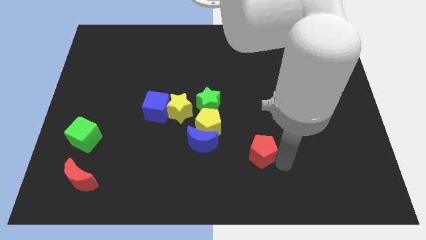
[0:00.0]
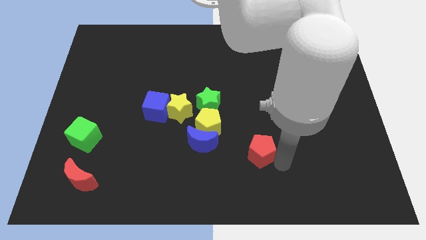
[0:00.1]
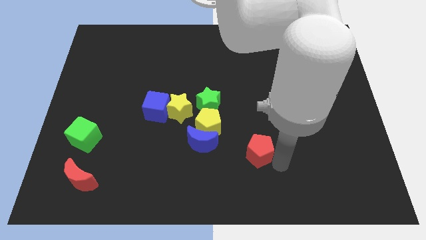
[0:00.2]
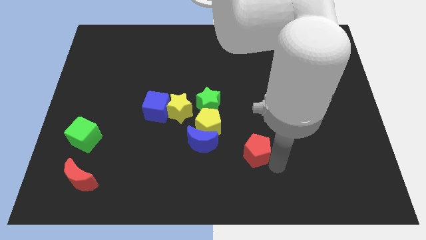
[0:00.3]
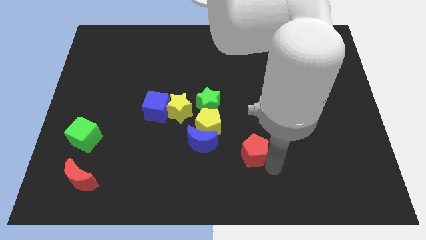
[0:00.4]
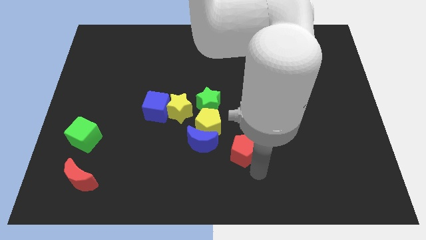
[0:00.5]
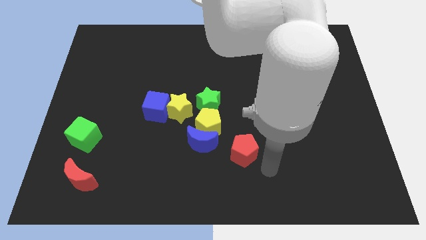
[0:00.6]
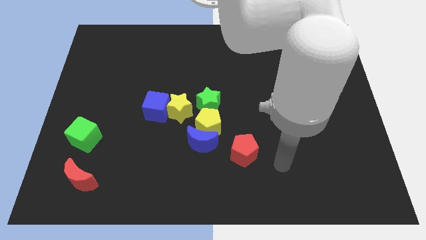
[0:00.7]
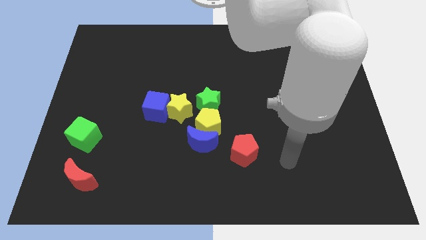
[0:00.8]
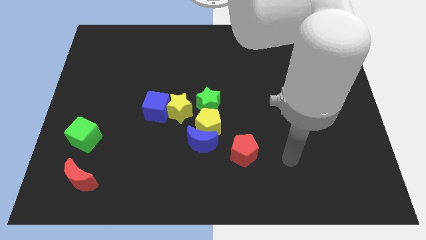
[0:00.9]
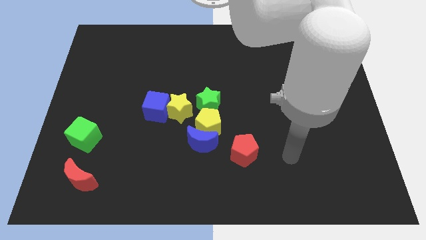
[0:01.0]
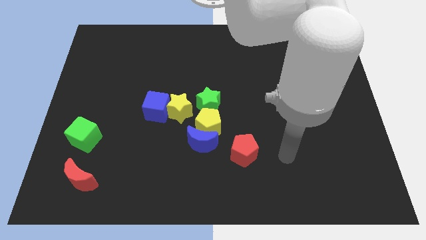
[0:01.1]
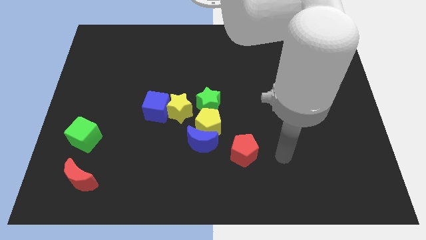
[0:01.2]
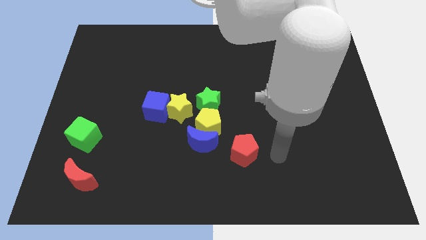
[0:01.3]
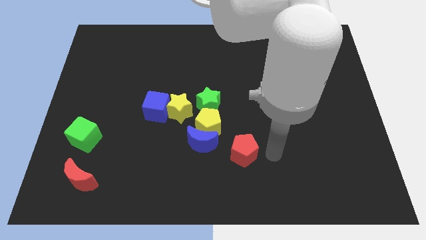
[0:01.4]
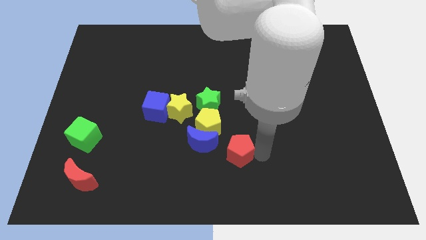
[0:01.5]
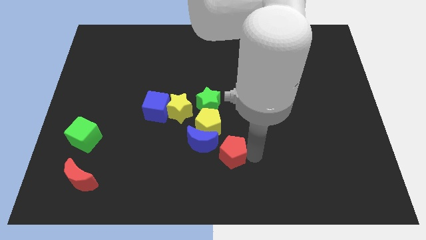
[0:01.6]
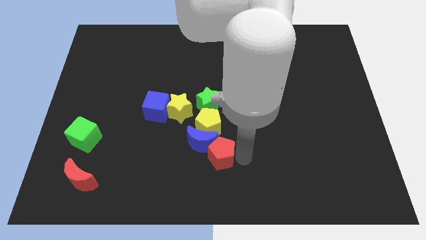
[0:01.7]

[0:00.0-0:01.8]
push the red pentagon bottom right to the blue crescent

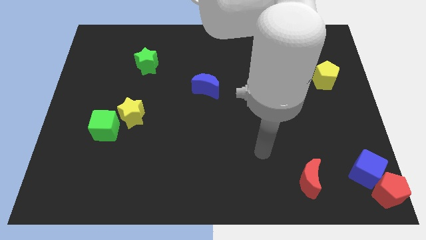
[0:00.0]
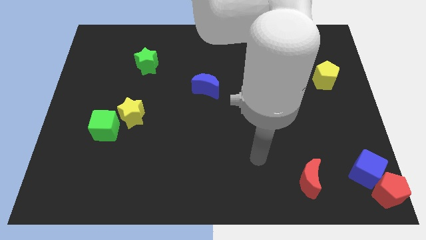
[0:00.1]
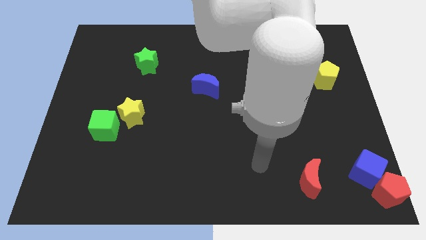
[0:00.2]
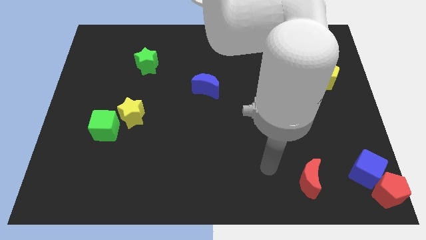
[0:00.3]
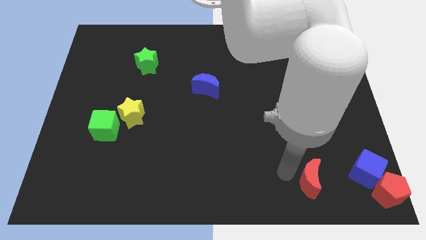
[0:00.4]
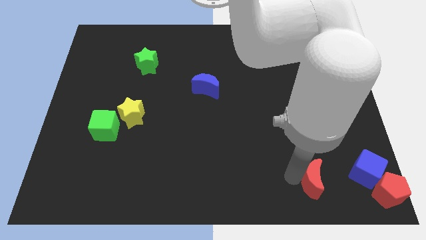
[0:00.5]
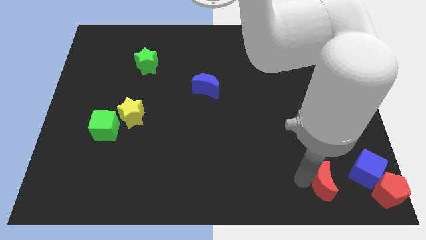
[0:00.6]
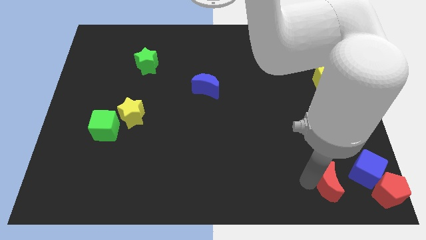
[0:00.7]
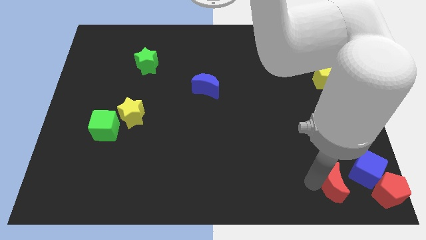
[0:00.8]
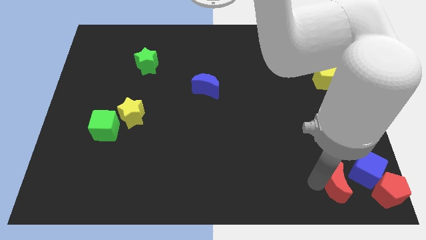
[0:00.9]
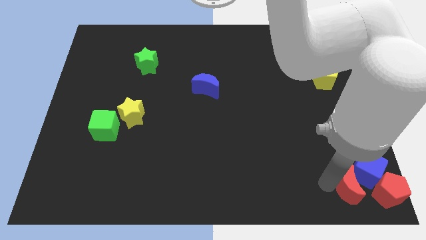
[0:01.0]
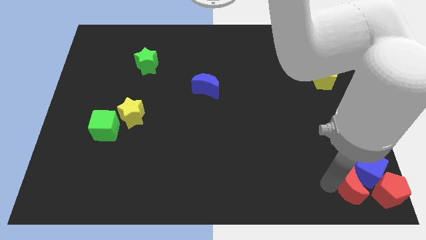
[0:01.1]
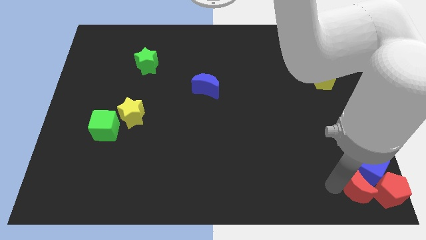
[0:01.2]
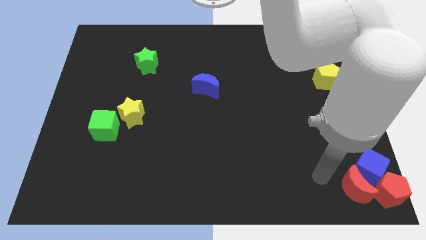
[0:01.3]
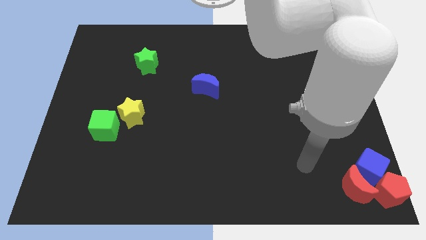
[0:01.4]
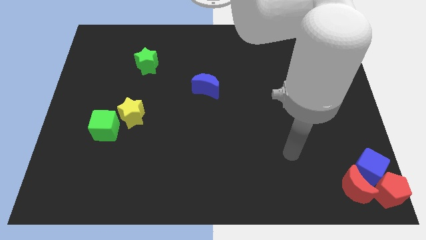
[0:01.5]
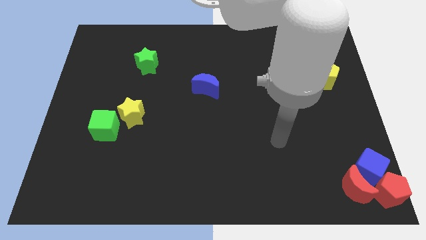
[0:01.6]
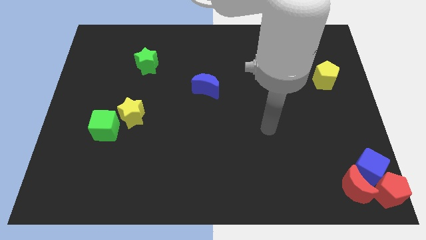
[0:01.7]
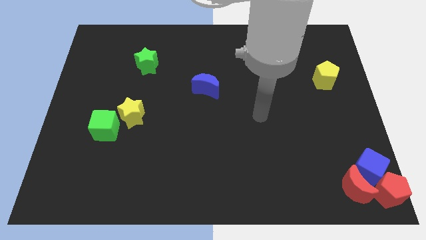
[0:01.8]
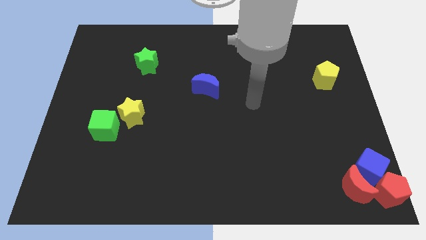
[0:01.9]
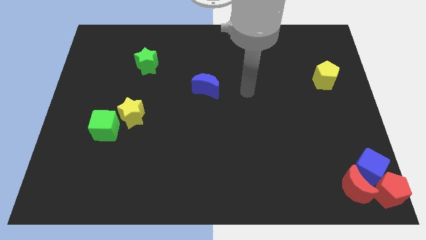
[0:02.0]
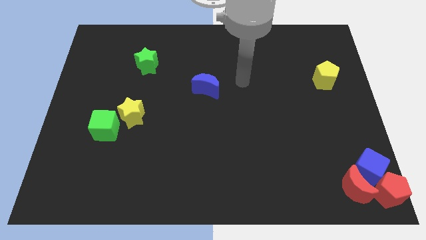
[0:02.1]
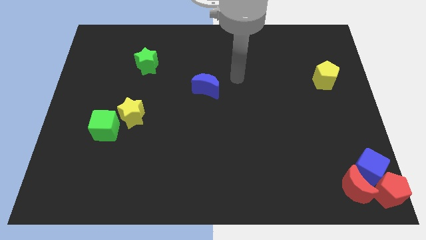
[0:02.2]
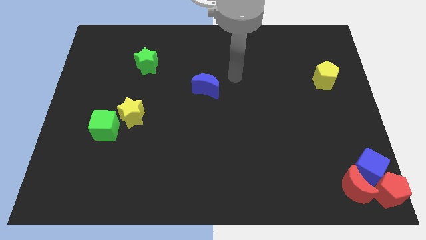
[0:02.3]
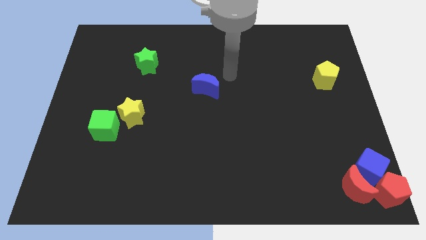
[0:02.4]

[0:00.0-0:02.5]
move the red moon close to the blue cube and red pentagon

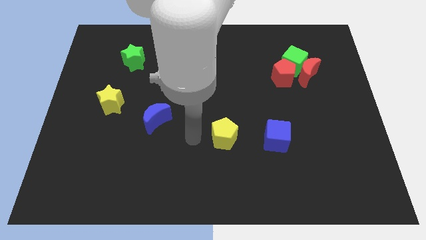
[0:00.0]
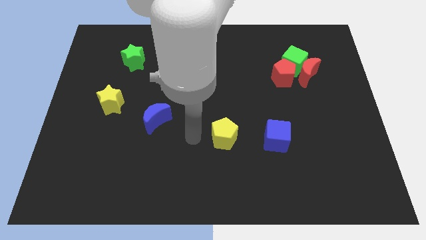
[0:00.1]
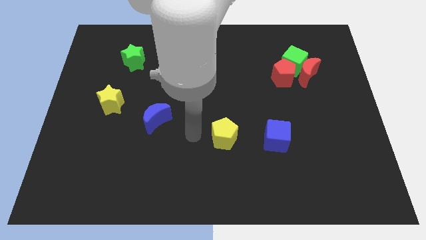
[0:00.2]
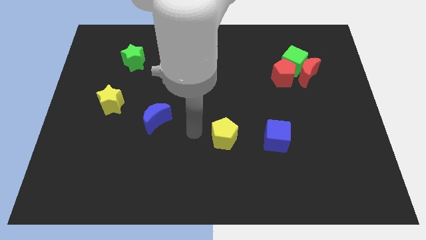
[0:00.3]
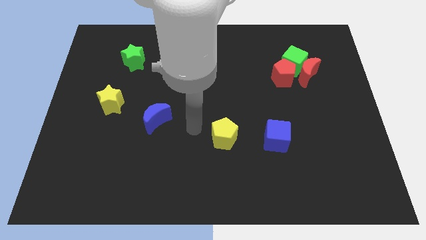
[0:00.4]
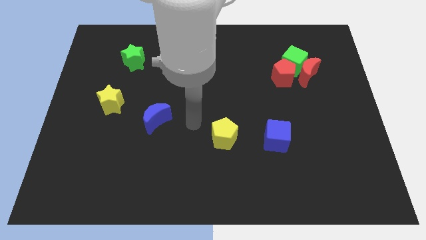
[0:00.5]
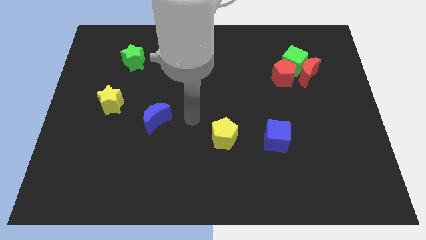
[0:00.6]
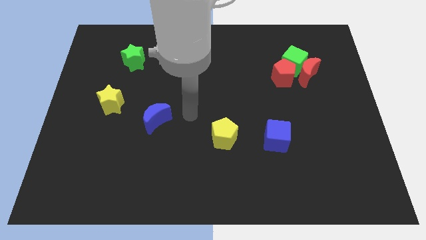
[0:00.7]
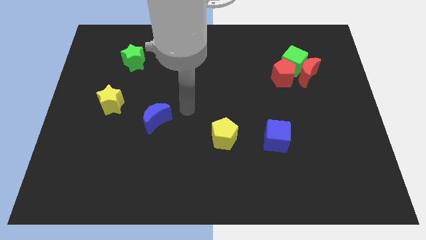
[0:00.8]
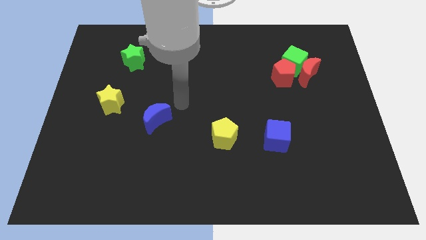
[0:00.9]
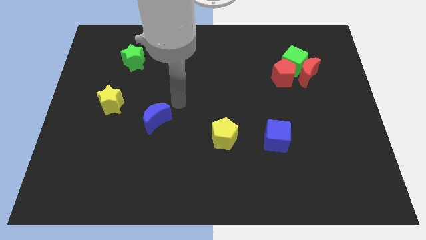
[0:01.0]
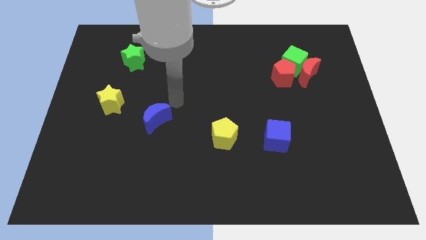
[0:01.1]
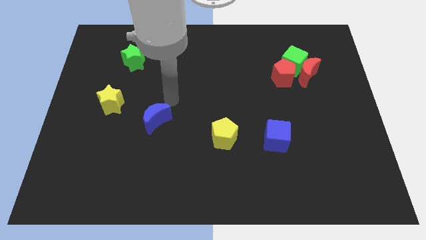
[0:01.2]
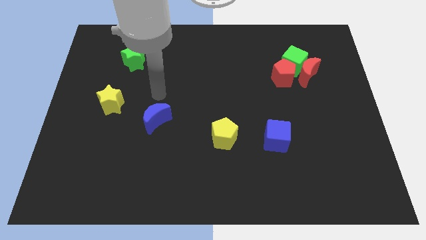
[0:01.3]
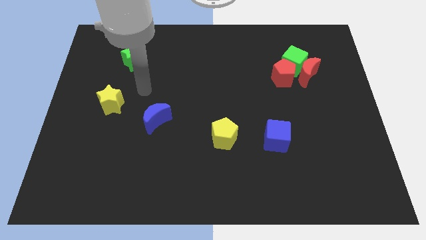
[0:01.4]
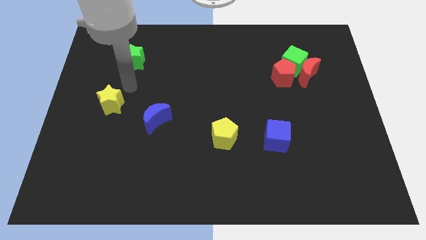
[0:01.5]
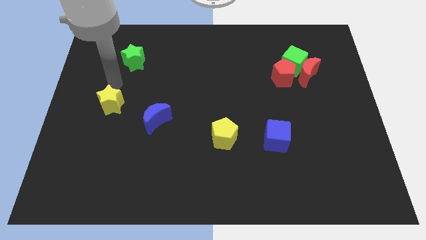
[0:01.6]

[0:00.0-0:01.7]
go to the top side of the yellow star

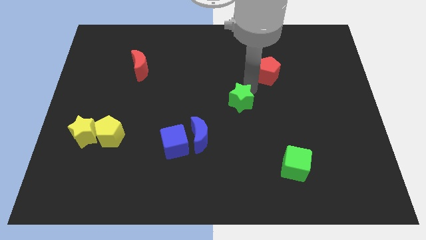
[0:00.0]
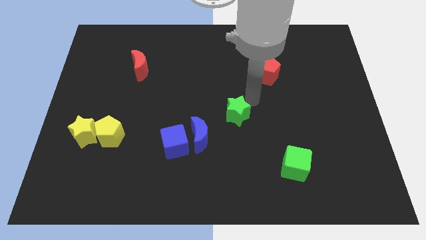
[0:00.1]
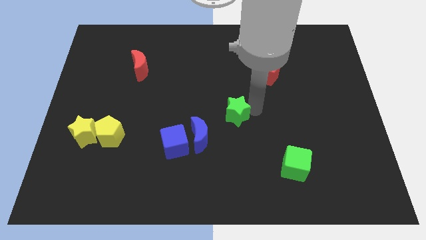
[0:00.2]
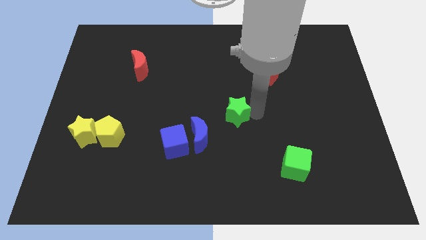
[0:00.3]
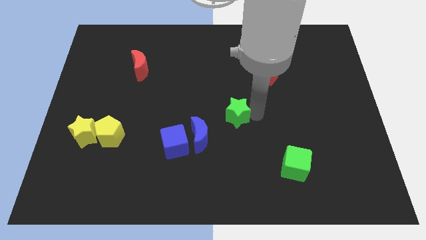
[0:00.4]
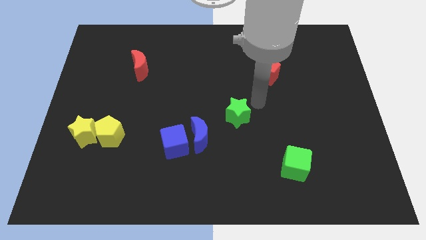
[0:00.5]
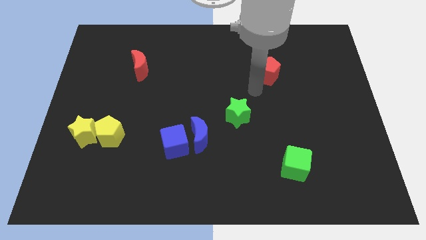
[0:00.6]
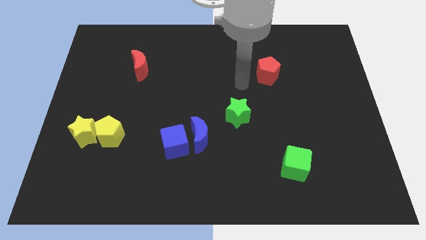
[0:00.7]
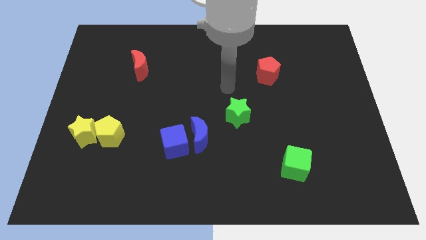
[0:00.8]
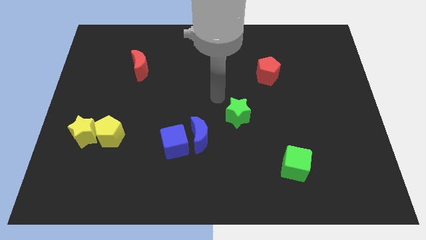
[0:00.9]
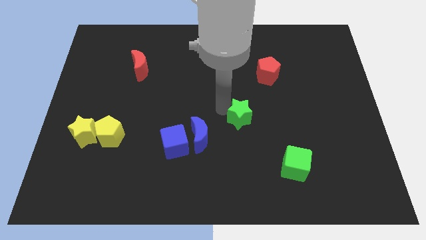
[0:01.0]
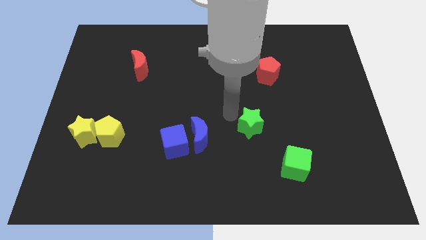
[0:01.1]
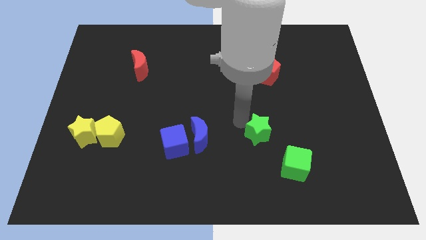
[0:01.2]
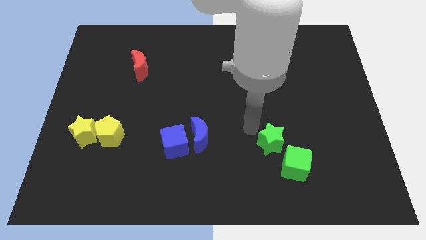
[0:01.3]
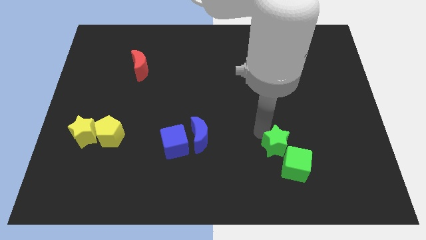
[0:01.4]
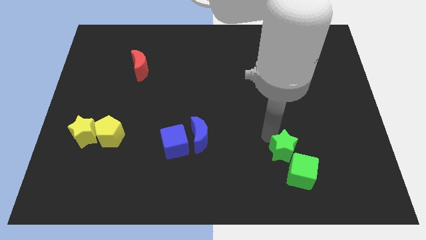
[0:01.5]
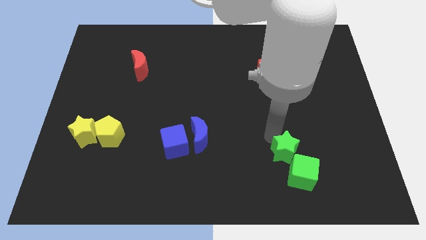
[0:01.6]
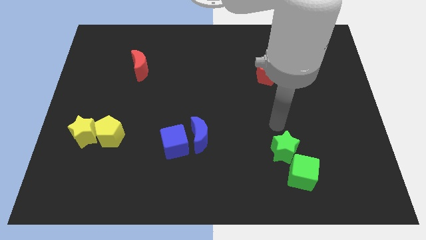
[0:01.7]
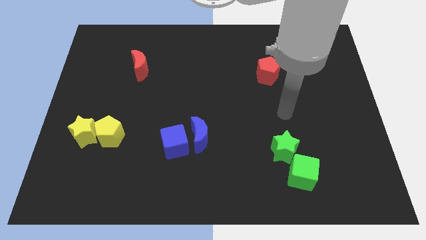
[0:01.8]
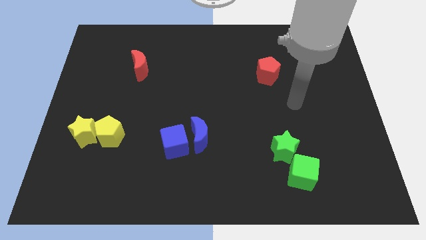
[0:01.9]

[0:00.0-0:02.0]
push the green star into the green cube on top

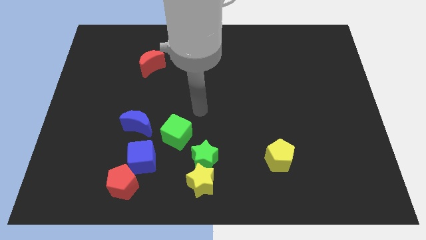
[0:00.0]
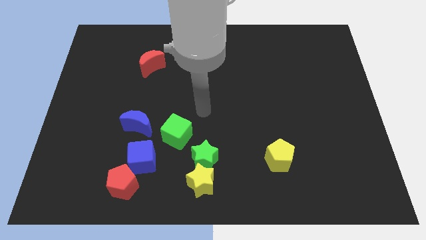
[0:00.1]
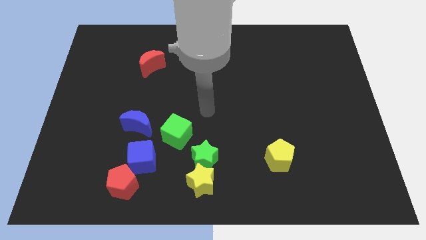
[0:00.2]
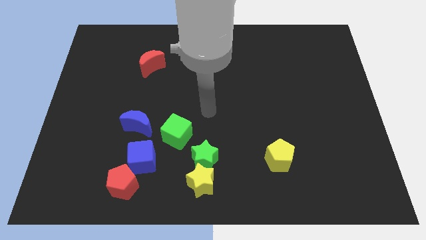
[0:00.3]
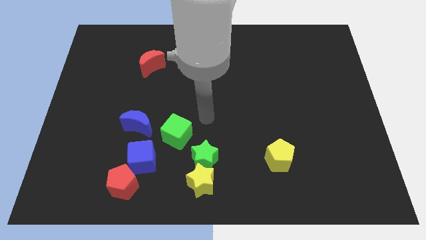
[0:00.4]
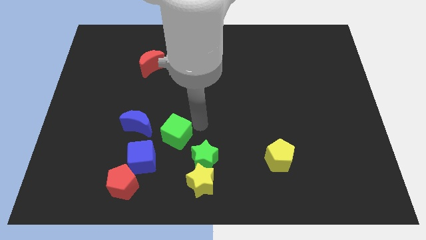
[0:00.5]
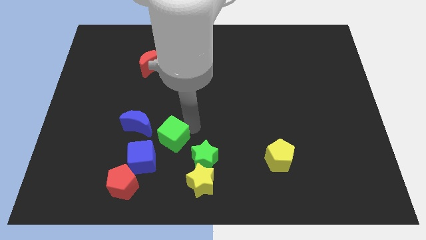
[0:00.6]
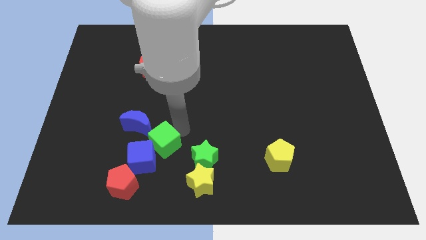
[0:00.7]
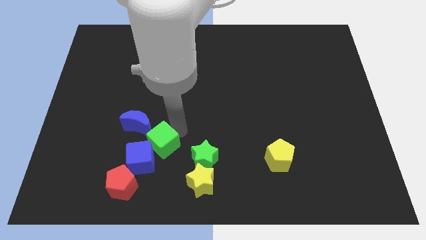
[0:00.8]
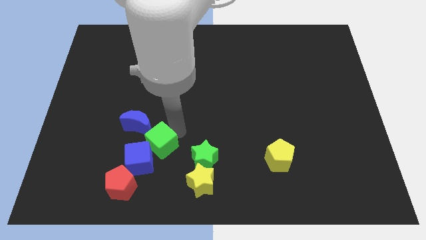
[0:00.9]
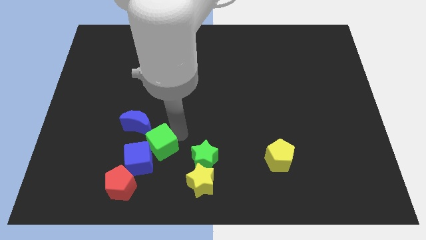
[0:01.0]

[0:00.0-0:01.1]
push green cube in to blue cube
